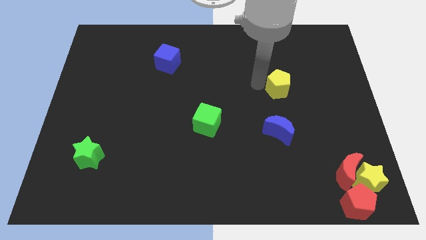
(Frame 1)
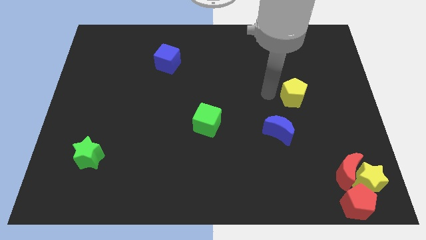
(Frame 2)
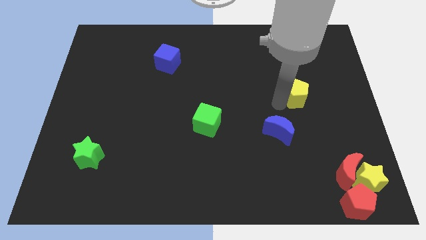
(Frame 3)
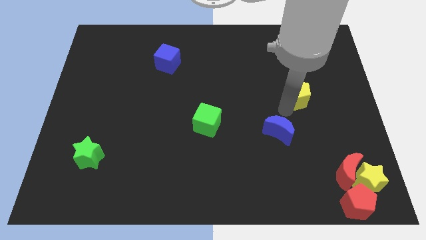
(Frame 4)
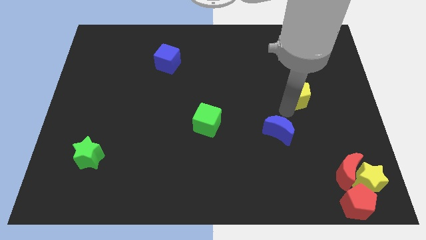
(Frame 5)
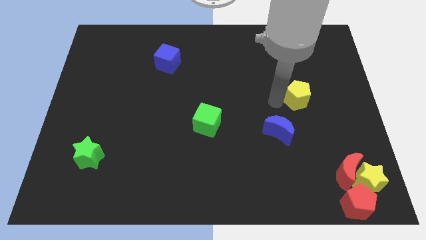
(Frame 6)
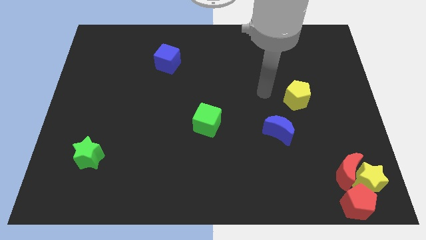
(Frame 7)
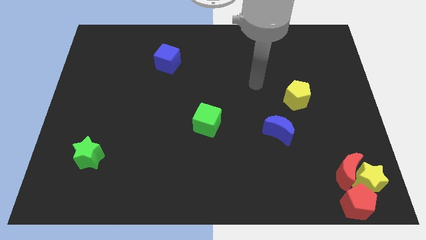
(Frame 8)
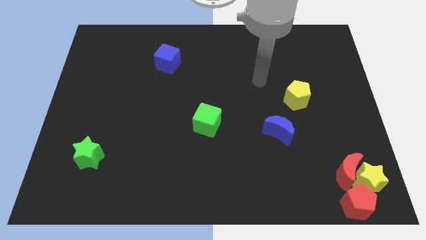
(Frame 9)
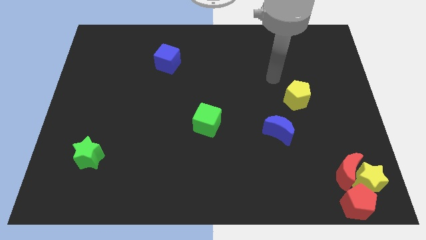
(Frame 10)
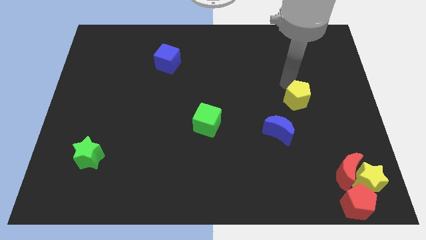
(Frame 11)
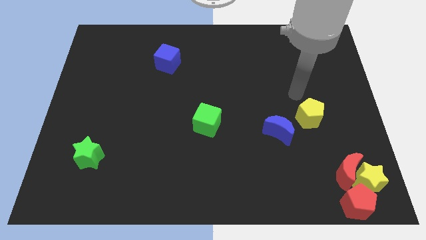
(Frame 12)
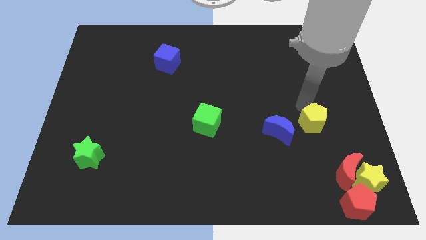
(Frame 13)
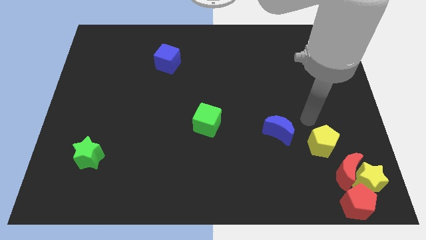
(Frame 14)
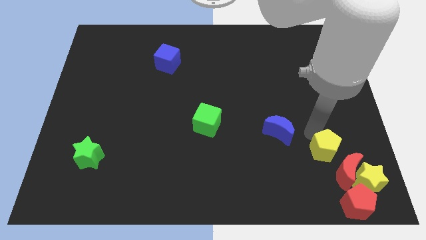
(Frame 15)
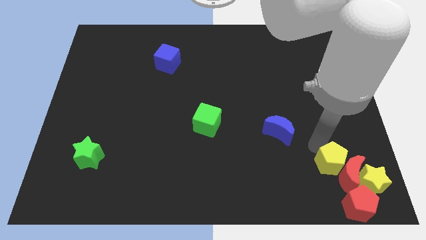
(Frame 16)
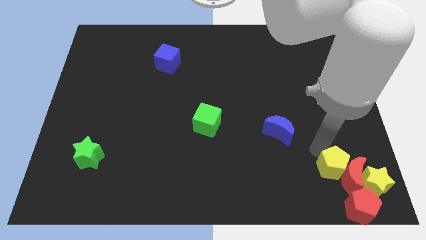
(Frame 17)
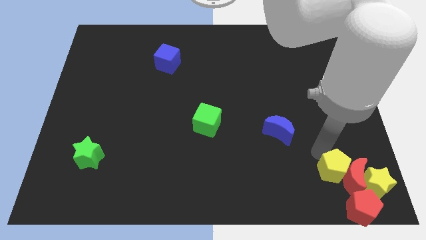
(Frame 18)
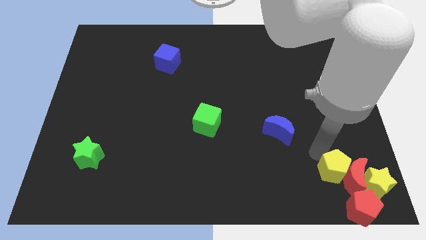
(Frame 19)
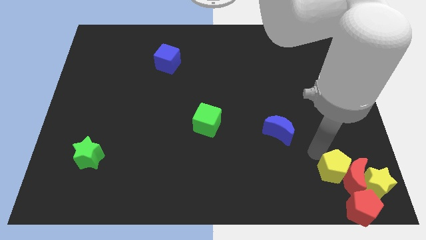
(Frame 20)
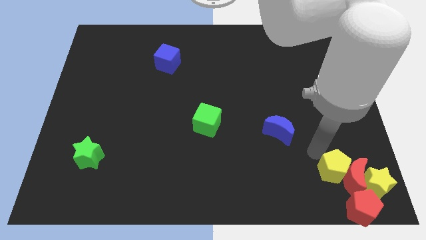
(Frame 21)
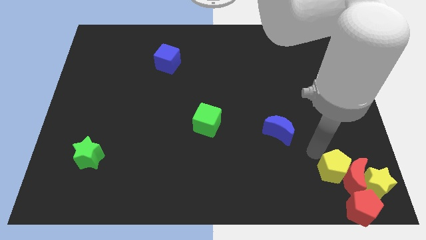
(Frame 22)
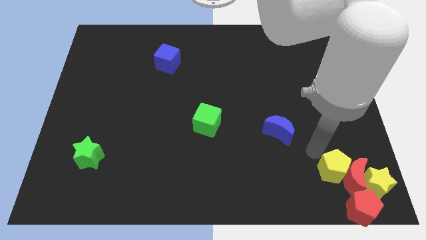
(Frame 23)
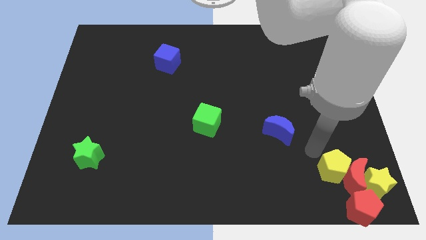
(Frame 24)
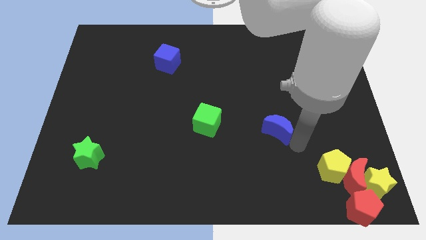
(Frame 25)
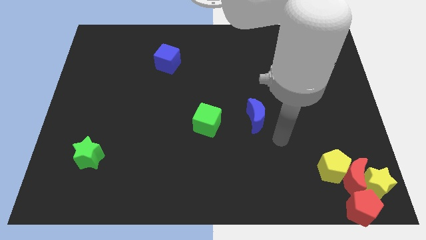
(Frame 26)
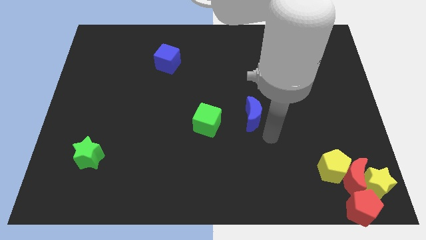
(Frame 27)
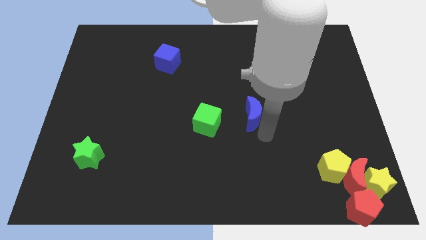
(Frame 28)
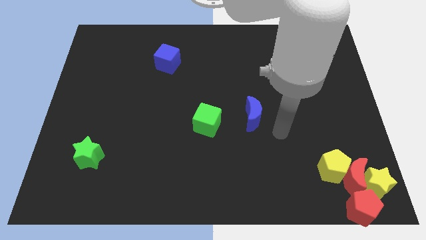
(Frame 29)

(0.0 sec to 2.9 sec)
move the yellow pentagon into a group of objects

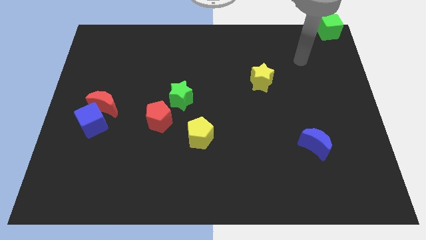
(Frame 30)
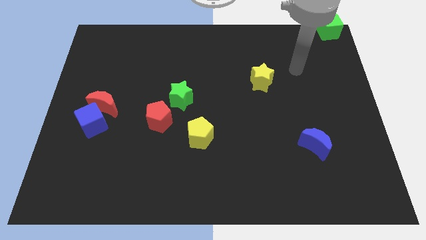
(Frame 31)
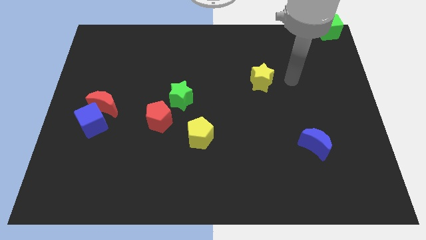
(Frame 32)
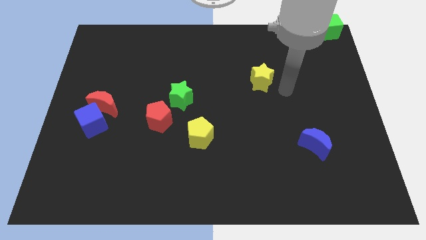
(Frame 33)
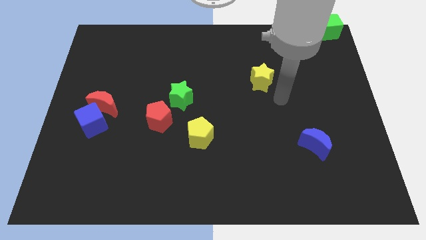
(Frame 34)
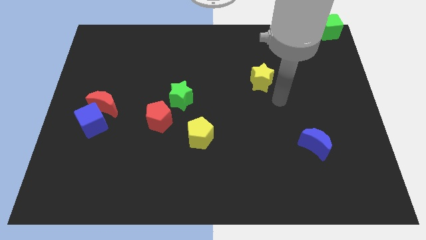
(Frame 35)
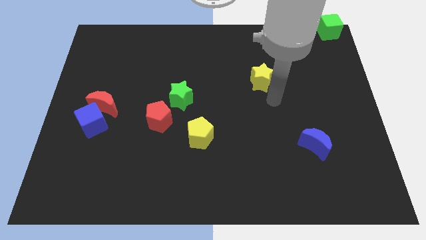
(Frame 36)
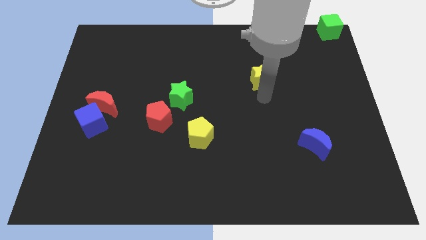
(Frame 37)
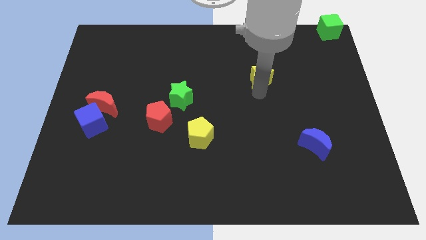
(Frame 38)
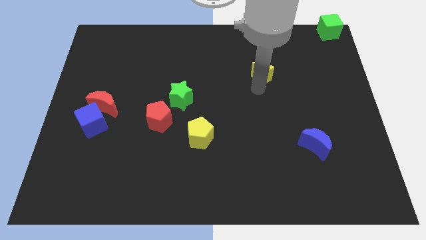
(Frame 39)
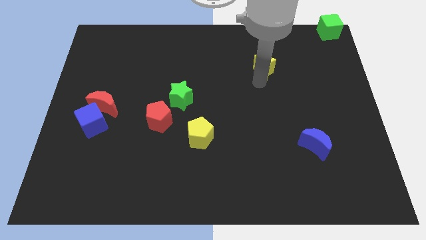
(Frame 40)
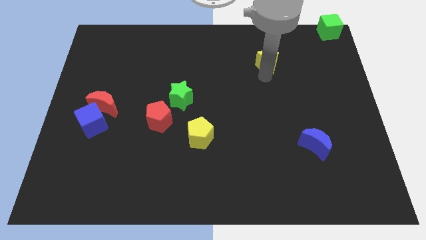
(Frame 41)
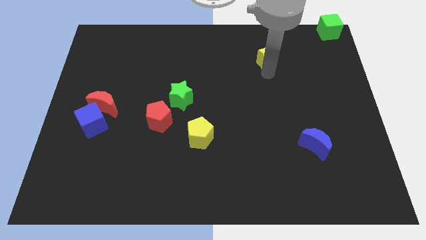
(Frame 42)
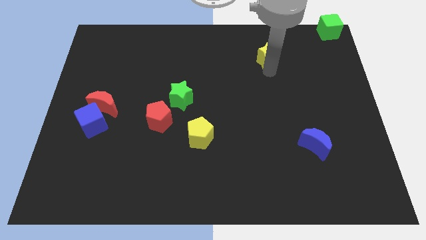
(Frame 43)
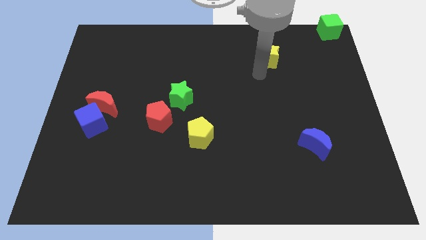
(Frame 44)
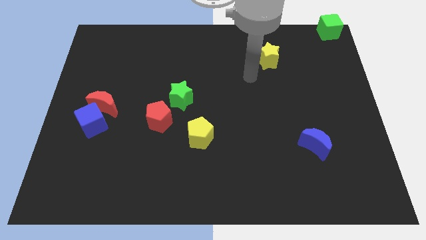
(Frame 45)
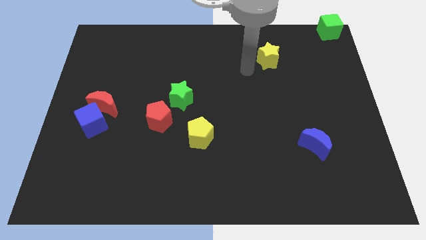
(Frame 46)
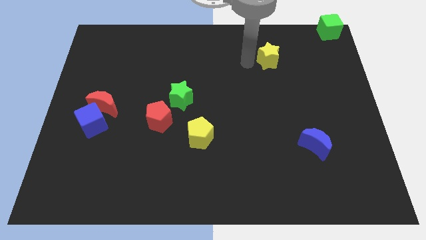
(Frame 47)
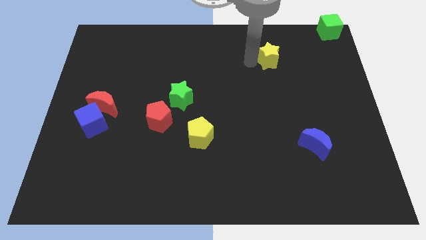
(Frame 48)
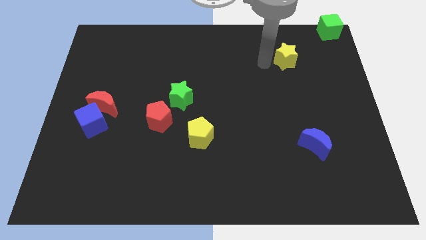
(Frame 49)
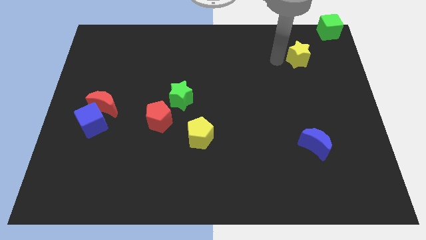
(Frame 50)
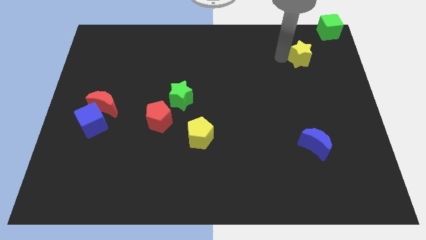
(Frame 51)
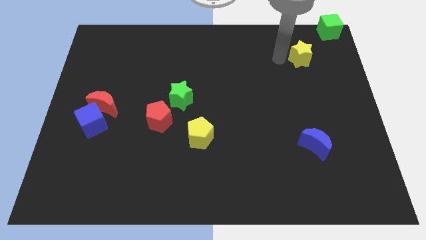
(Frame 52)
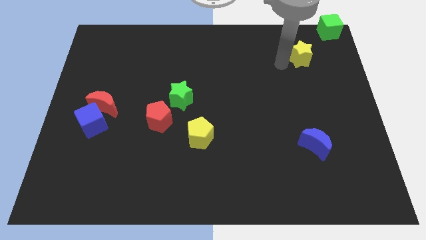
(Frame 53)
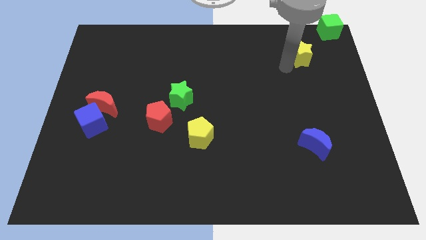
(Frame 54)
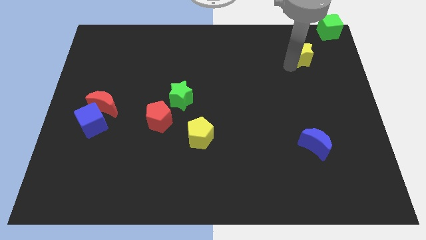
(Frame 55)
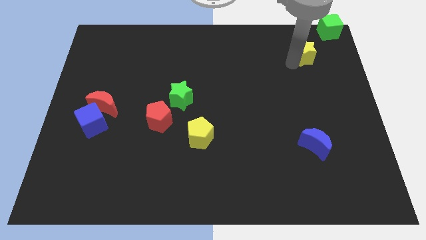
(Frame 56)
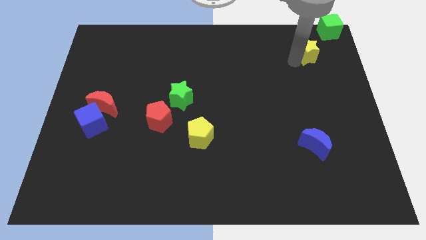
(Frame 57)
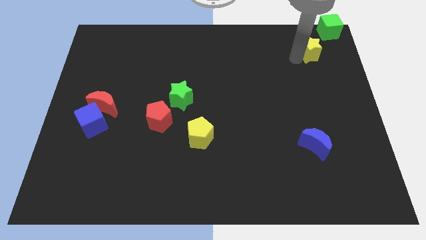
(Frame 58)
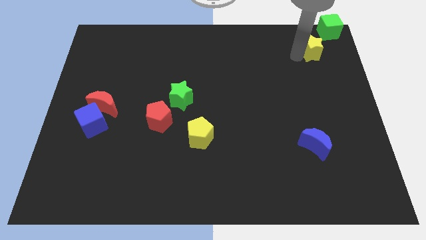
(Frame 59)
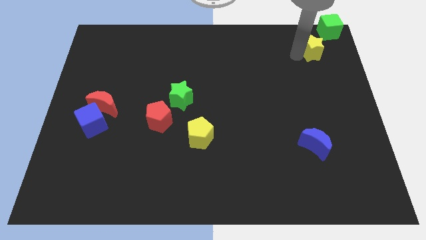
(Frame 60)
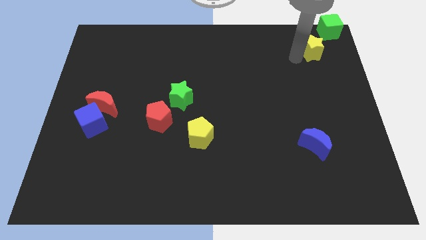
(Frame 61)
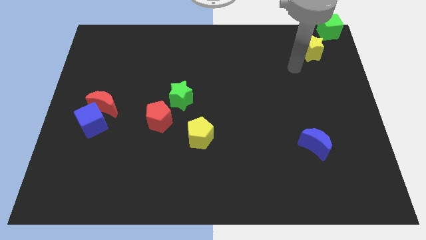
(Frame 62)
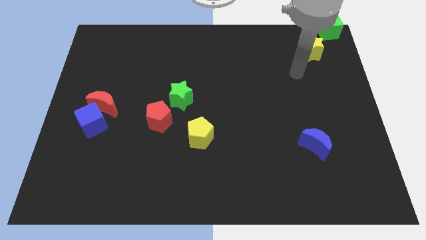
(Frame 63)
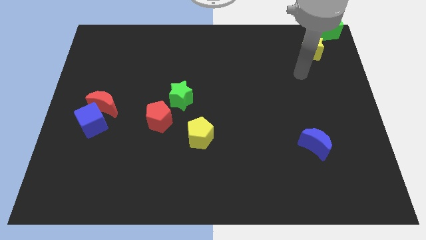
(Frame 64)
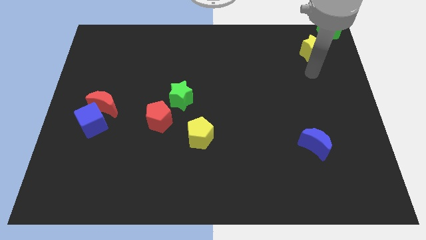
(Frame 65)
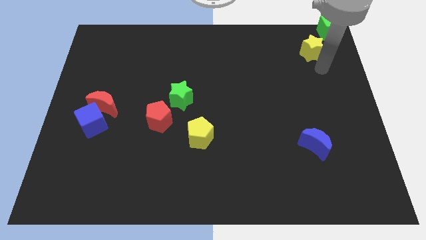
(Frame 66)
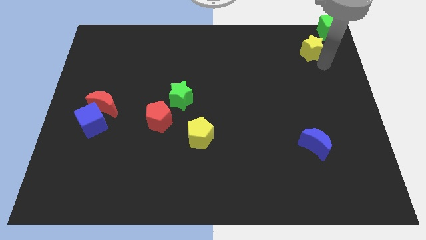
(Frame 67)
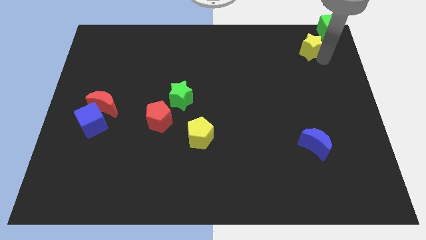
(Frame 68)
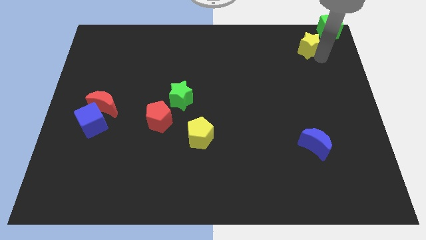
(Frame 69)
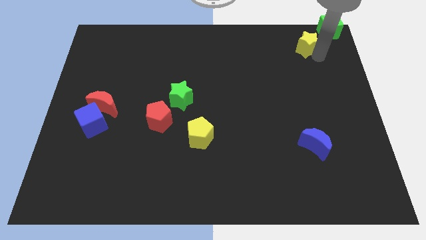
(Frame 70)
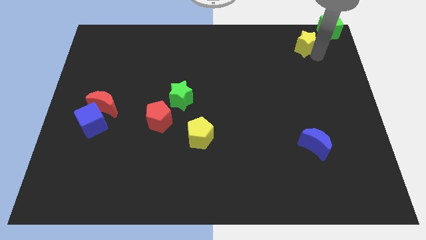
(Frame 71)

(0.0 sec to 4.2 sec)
move the yellow star towards the left of green cube at the top right of the board

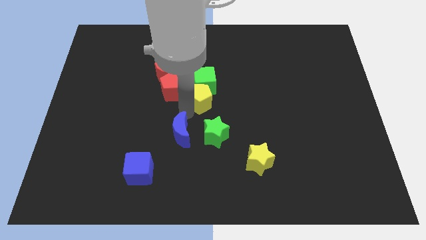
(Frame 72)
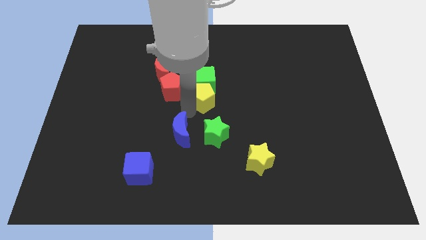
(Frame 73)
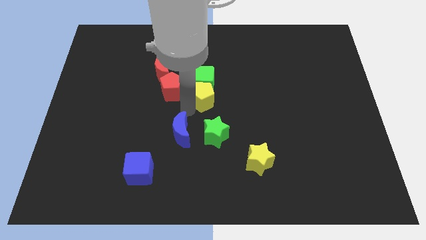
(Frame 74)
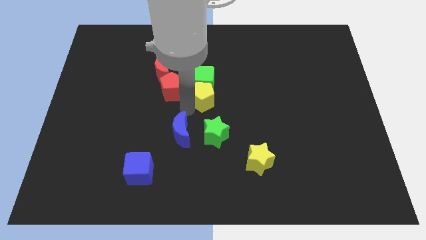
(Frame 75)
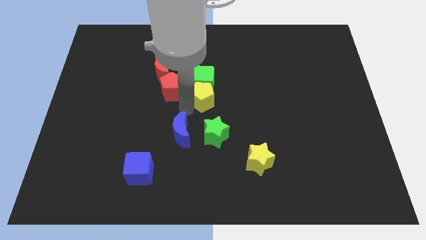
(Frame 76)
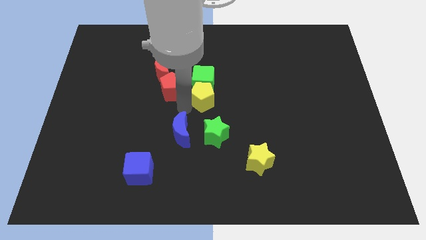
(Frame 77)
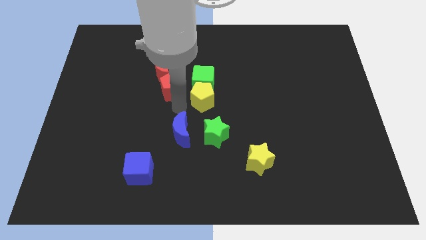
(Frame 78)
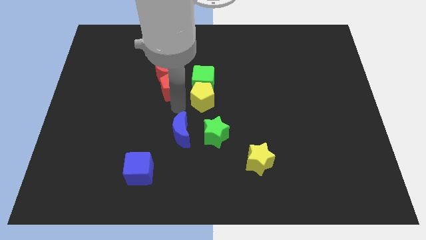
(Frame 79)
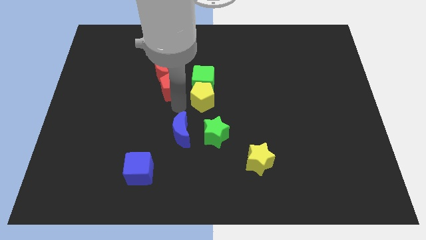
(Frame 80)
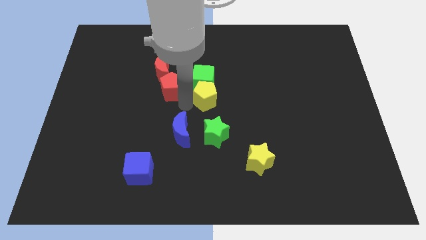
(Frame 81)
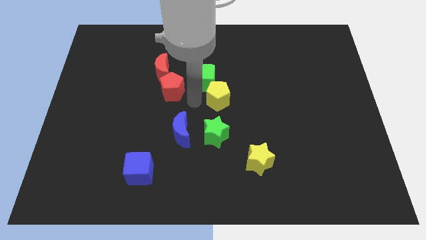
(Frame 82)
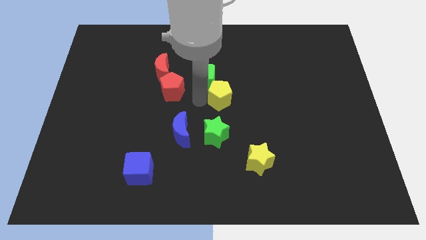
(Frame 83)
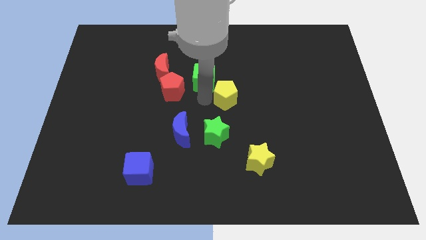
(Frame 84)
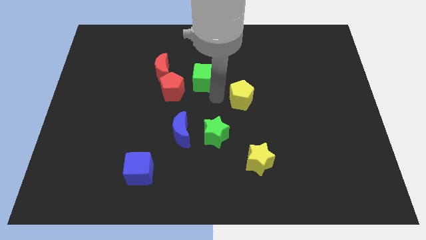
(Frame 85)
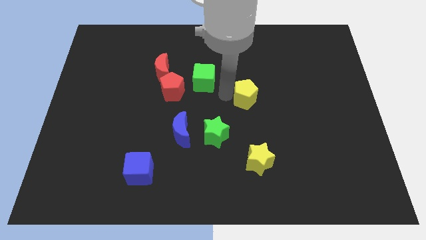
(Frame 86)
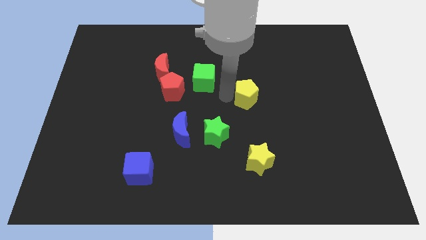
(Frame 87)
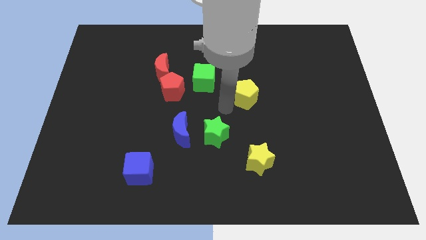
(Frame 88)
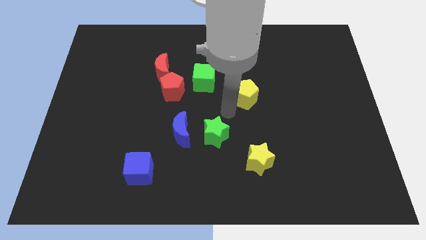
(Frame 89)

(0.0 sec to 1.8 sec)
push yellow pentagon slightly towards the top right corner of the board
